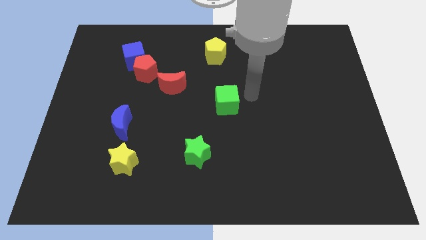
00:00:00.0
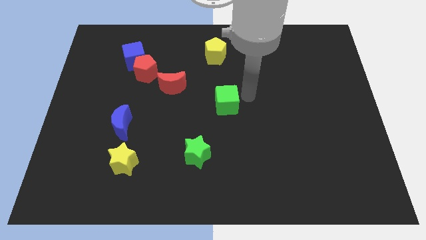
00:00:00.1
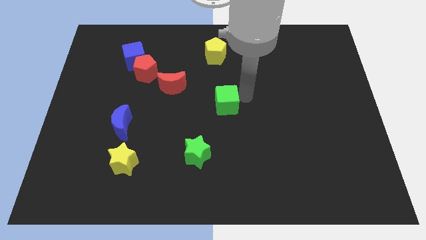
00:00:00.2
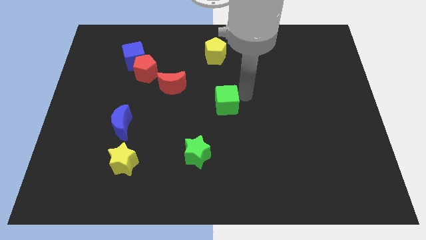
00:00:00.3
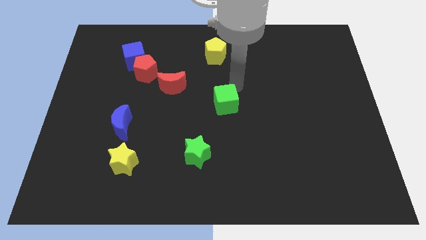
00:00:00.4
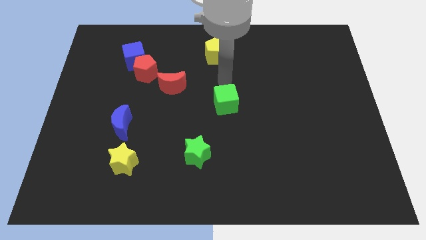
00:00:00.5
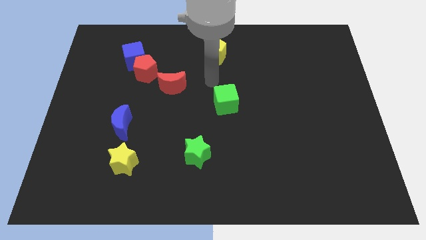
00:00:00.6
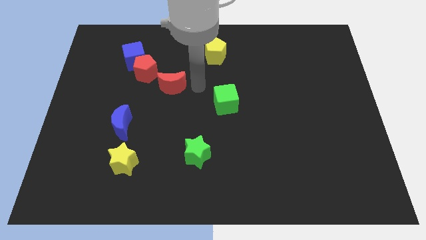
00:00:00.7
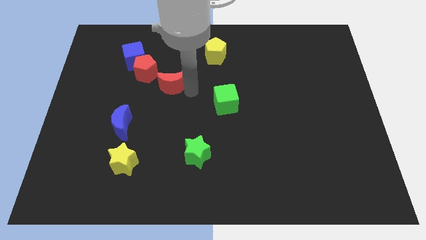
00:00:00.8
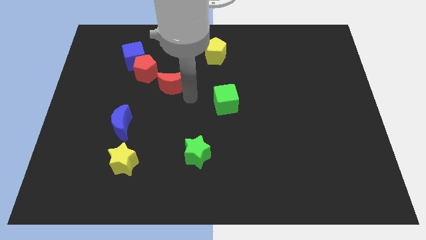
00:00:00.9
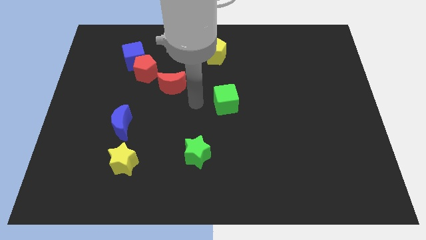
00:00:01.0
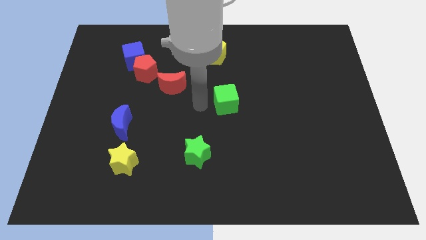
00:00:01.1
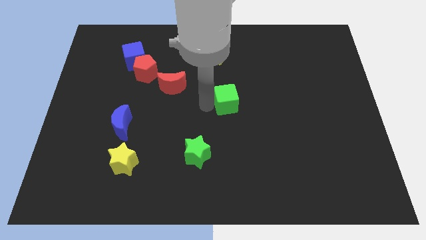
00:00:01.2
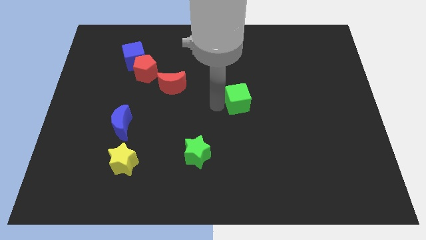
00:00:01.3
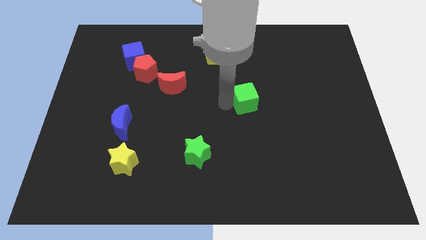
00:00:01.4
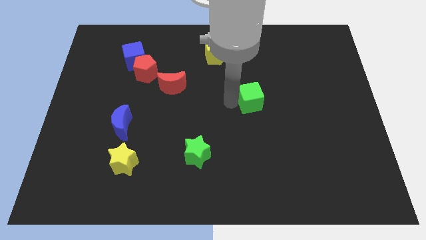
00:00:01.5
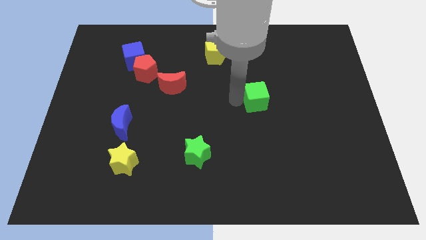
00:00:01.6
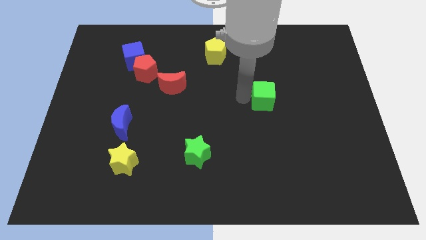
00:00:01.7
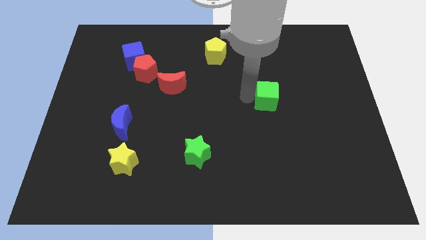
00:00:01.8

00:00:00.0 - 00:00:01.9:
push the green cube to the right side

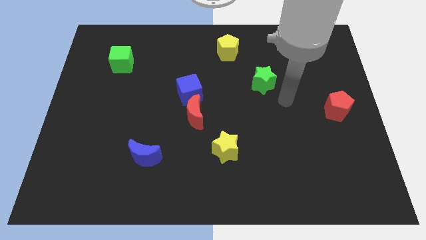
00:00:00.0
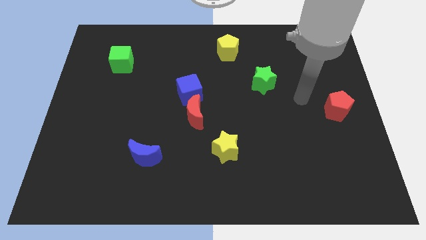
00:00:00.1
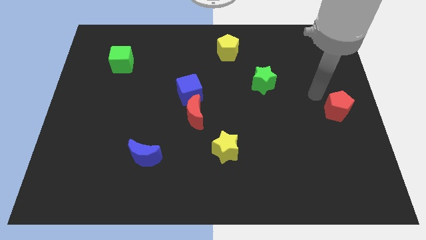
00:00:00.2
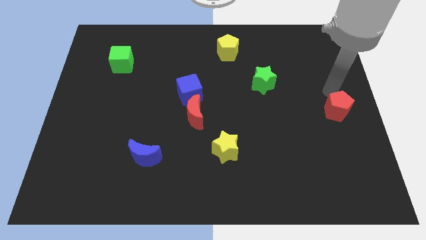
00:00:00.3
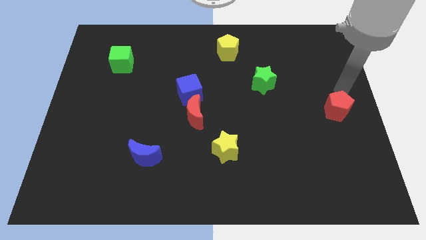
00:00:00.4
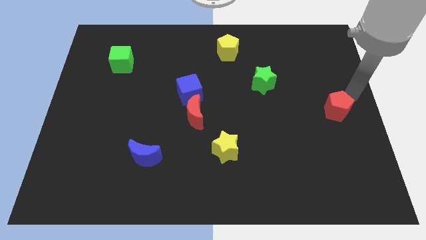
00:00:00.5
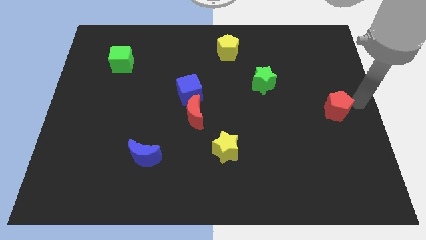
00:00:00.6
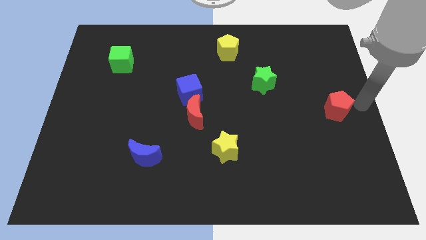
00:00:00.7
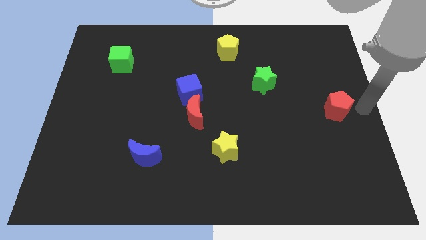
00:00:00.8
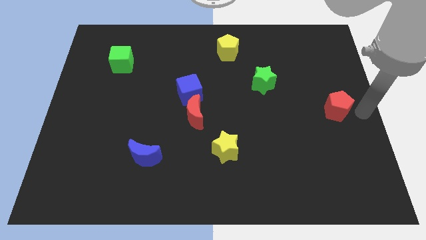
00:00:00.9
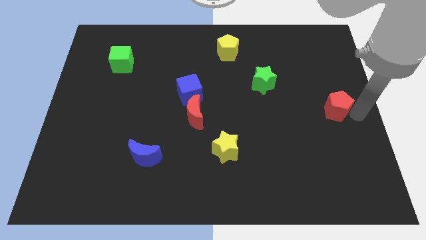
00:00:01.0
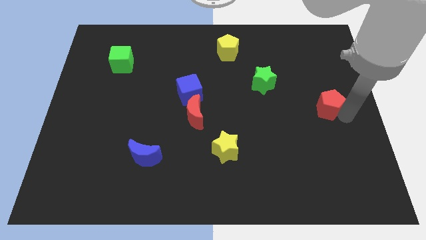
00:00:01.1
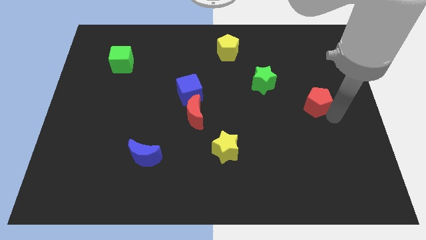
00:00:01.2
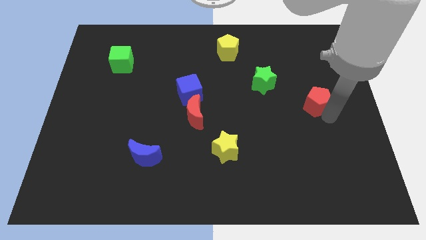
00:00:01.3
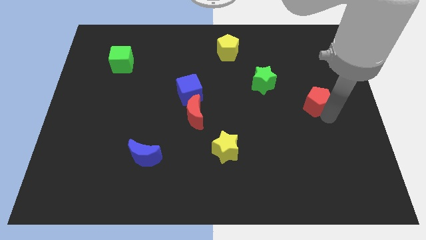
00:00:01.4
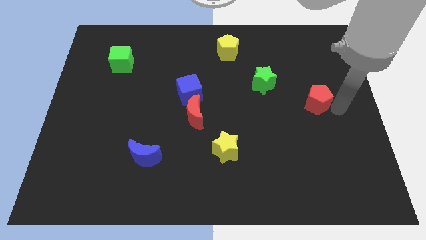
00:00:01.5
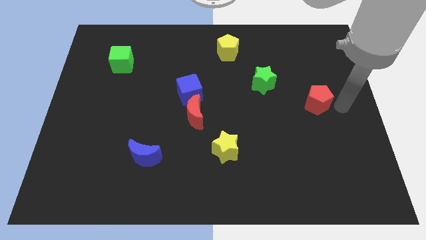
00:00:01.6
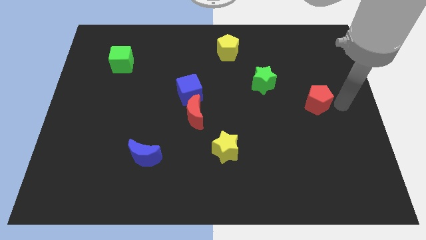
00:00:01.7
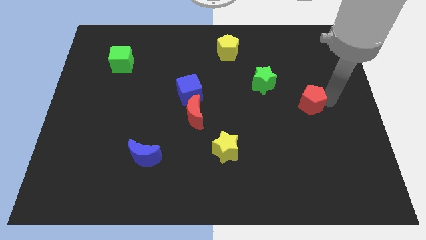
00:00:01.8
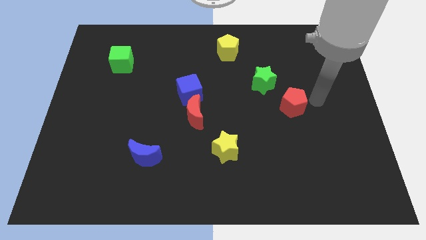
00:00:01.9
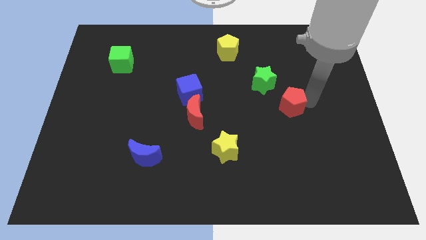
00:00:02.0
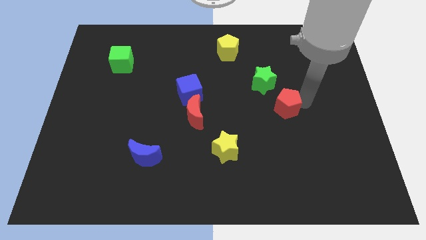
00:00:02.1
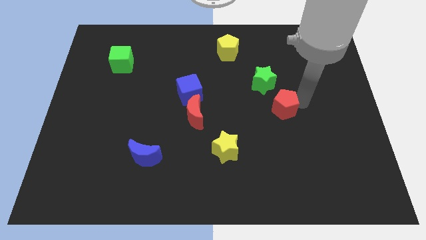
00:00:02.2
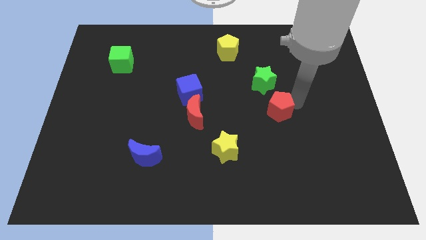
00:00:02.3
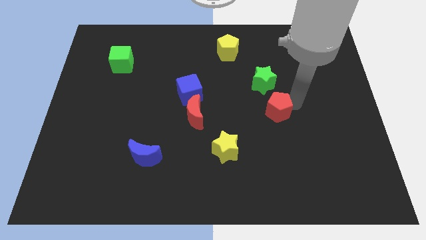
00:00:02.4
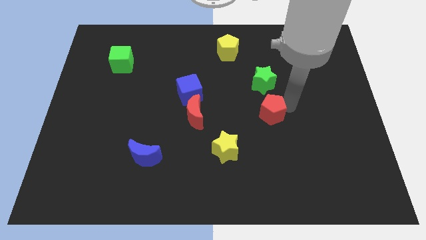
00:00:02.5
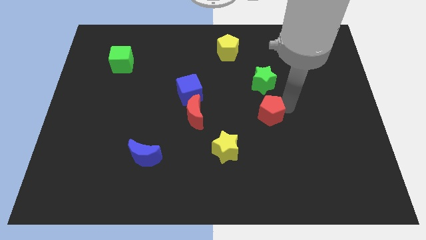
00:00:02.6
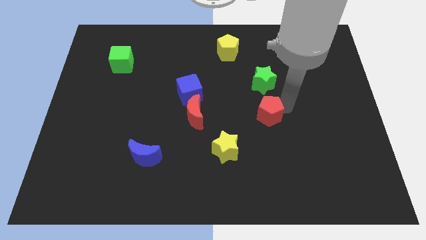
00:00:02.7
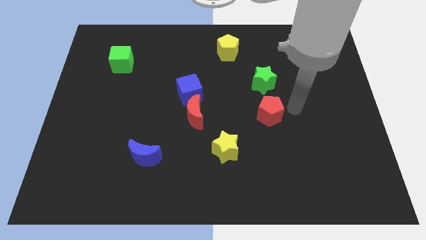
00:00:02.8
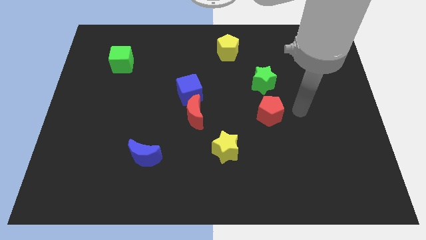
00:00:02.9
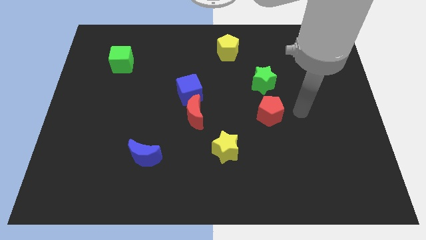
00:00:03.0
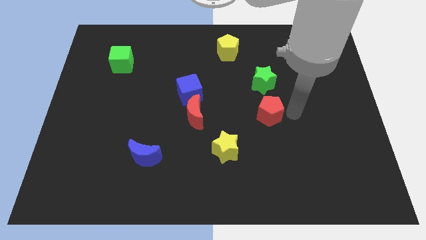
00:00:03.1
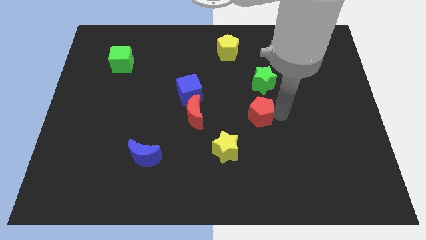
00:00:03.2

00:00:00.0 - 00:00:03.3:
drag the red pentagon to the bottom side of the green star

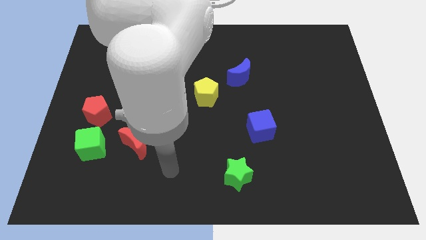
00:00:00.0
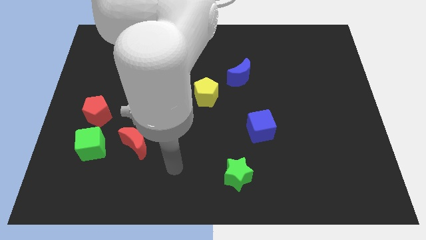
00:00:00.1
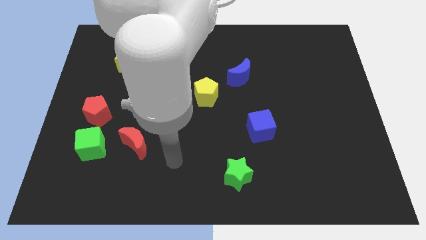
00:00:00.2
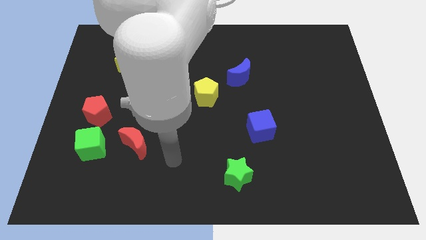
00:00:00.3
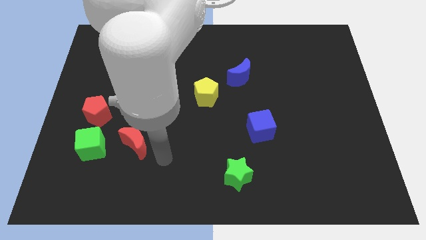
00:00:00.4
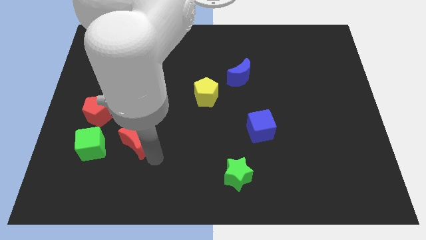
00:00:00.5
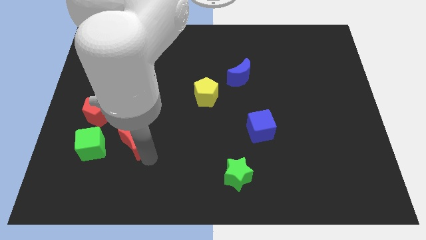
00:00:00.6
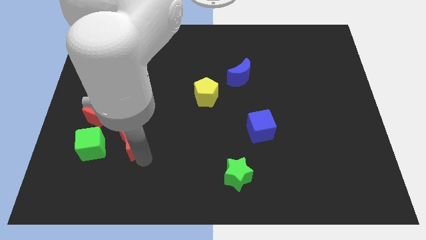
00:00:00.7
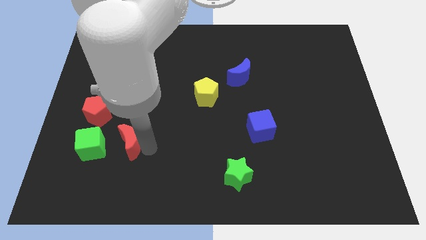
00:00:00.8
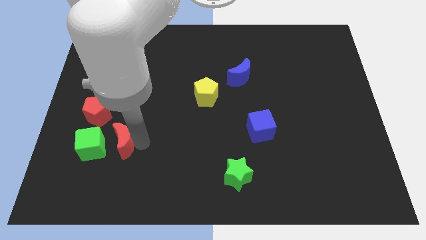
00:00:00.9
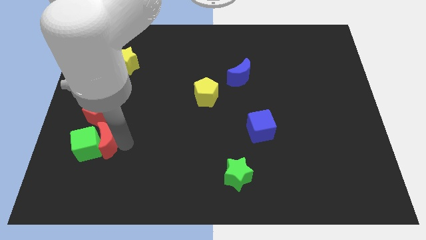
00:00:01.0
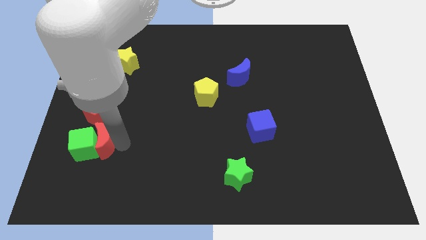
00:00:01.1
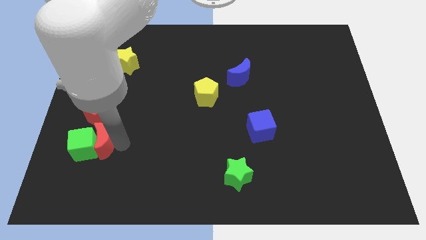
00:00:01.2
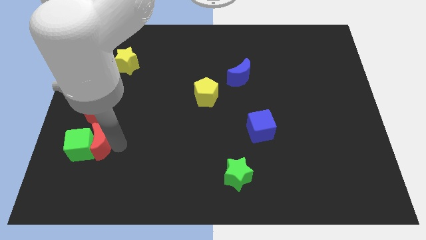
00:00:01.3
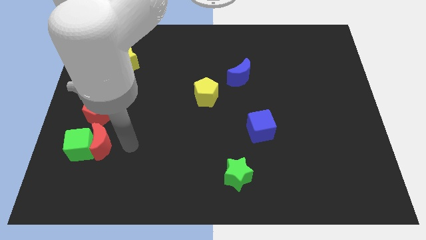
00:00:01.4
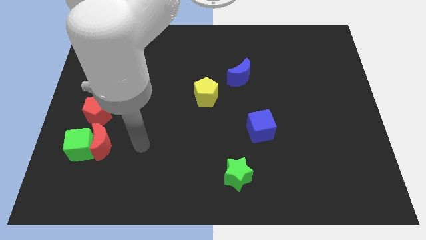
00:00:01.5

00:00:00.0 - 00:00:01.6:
move red moon into the green cube

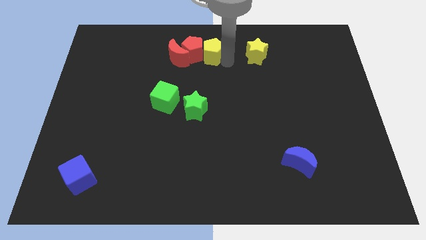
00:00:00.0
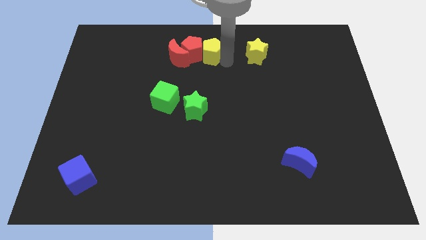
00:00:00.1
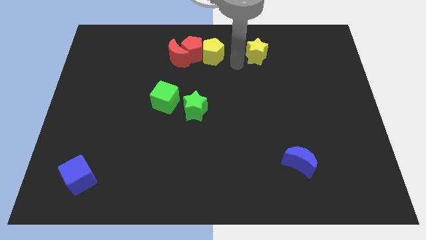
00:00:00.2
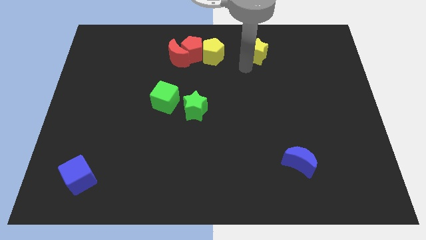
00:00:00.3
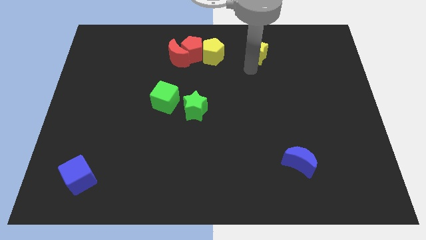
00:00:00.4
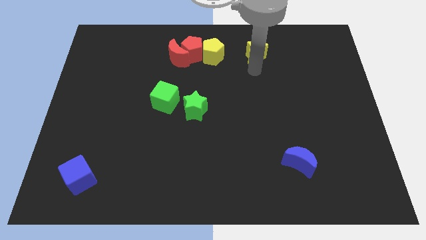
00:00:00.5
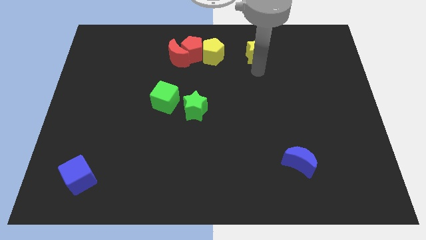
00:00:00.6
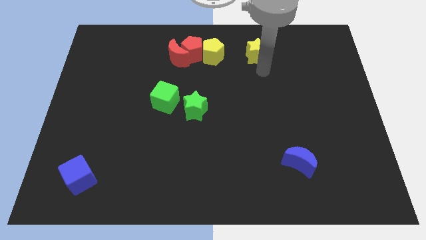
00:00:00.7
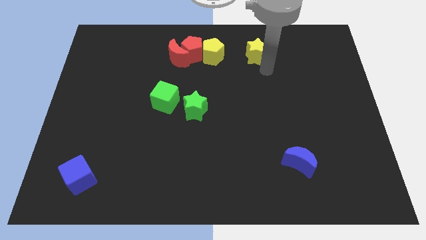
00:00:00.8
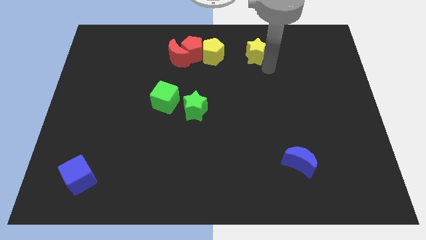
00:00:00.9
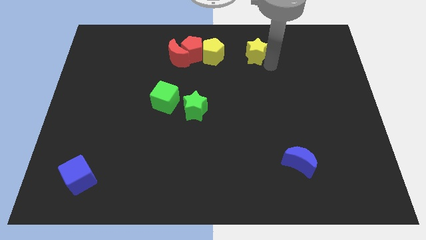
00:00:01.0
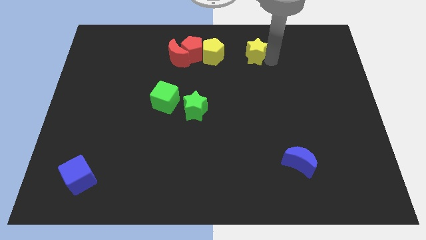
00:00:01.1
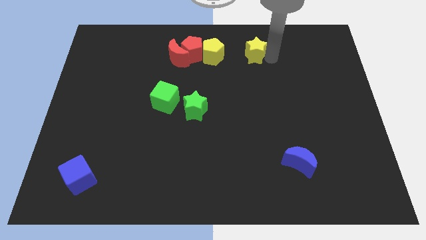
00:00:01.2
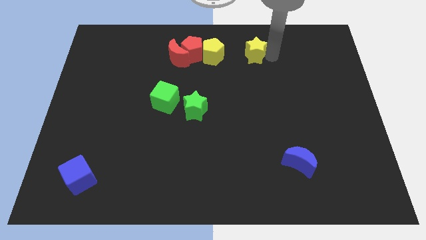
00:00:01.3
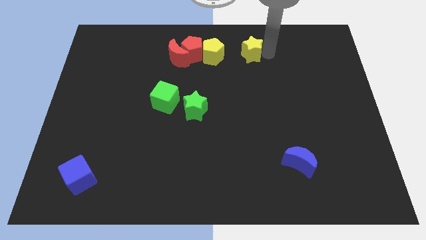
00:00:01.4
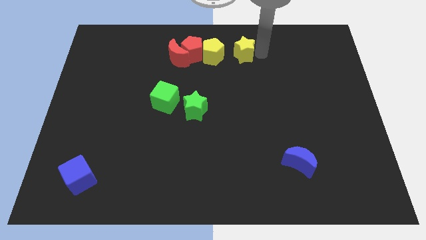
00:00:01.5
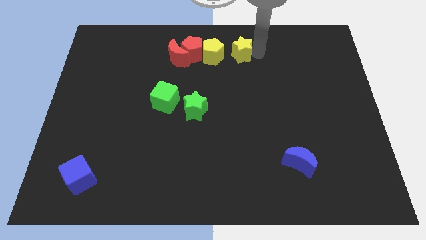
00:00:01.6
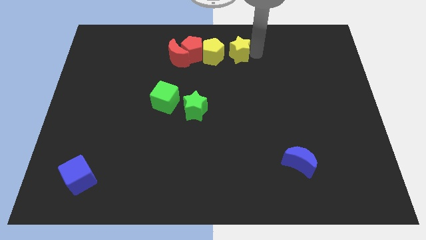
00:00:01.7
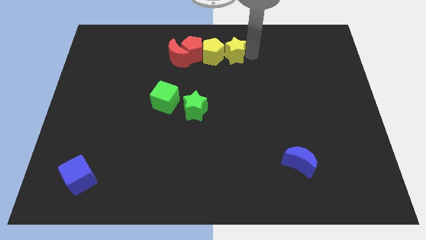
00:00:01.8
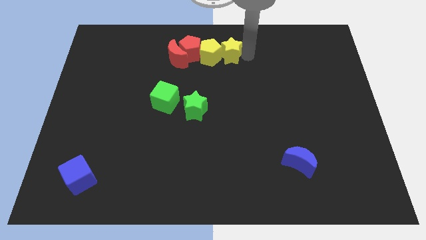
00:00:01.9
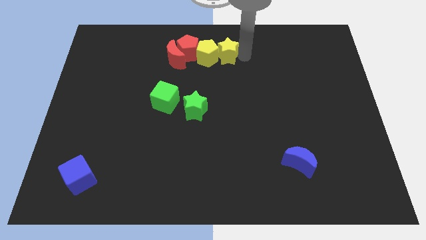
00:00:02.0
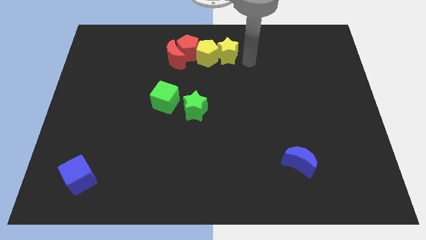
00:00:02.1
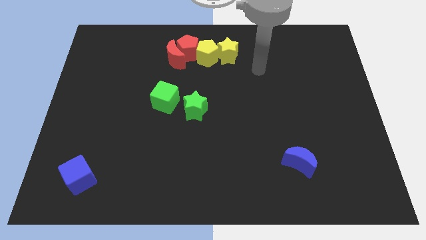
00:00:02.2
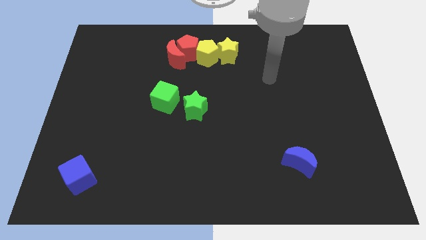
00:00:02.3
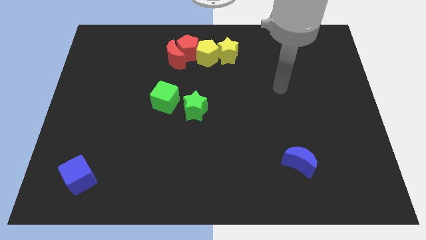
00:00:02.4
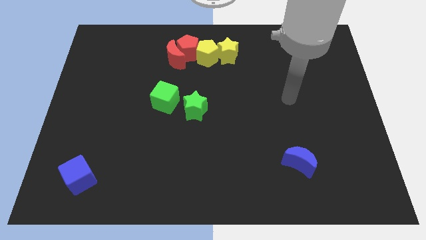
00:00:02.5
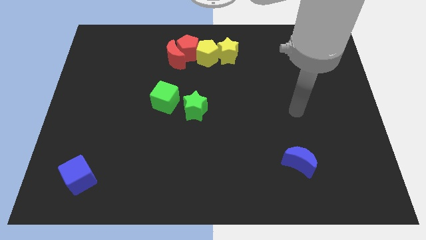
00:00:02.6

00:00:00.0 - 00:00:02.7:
push the yellow star into the group of blocks
